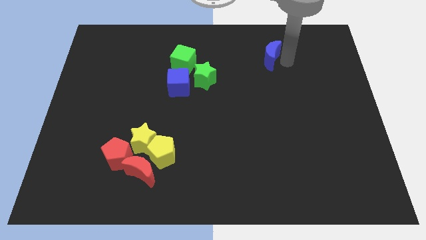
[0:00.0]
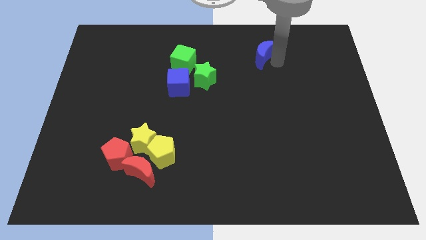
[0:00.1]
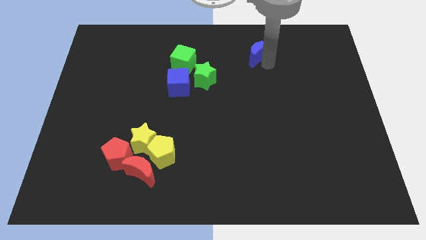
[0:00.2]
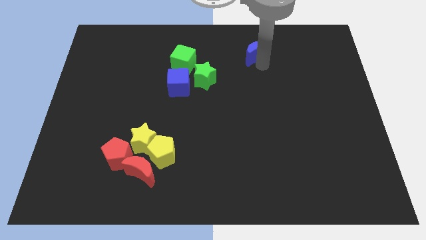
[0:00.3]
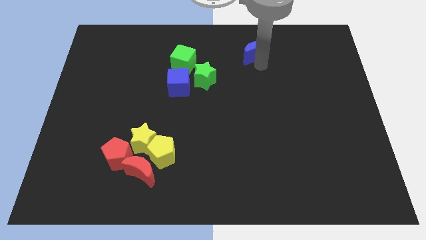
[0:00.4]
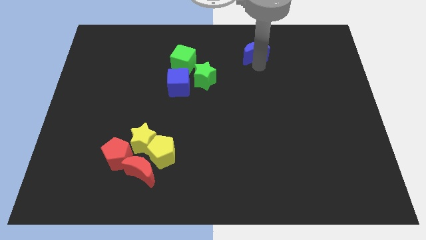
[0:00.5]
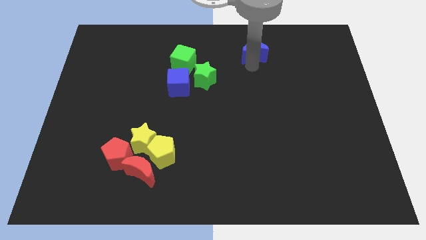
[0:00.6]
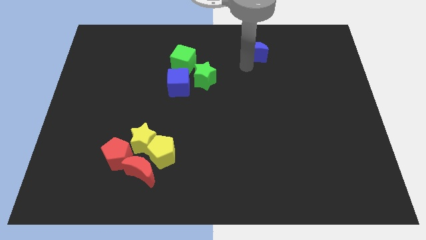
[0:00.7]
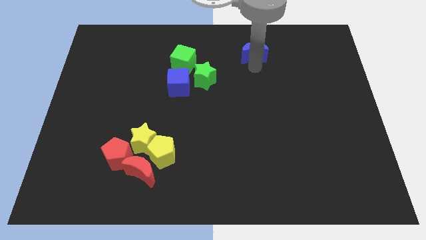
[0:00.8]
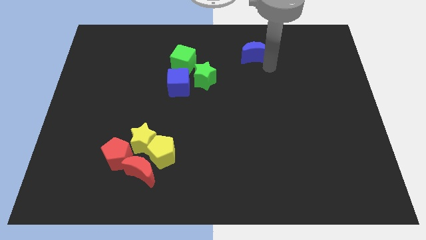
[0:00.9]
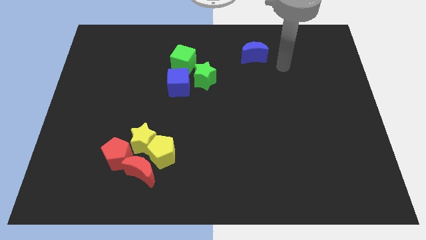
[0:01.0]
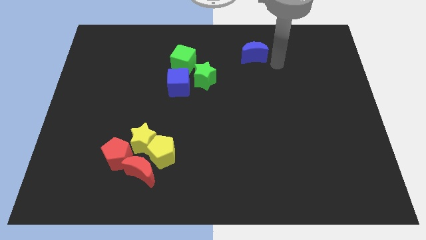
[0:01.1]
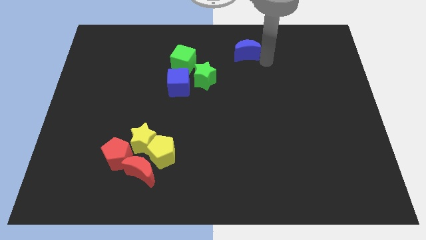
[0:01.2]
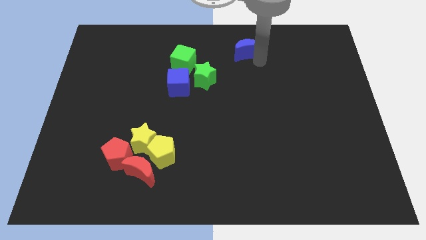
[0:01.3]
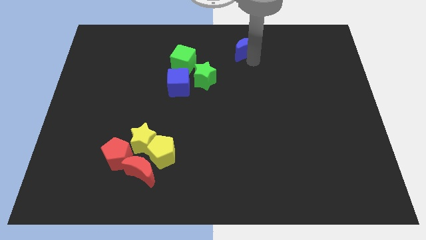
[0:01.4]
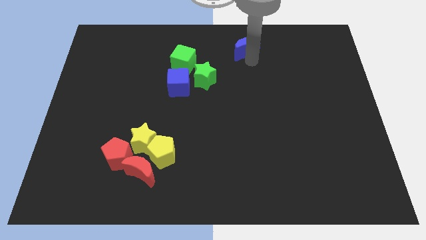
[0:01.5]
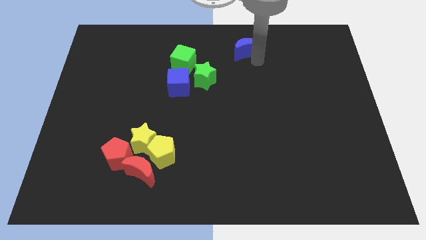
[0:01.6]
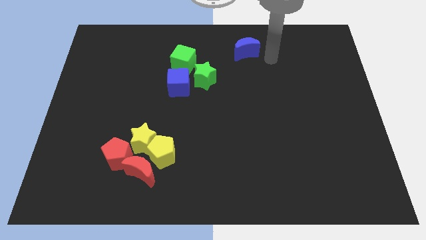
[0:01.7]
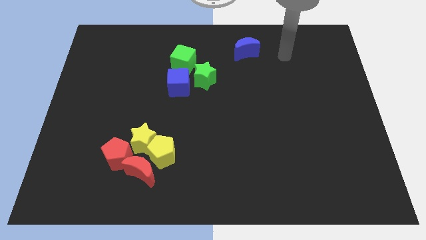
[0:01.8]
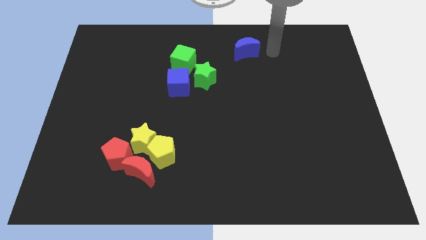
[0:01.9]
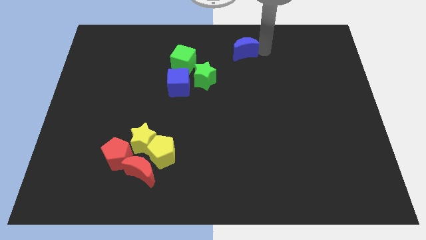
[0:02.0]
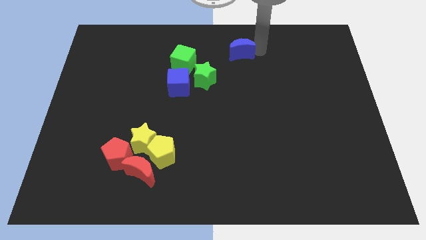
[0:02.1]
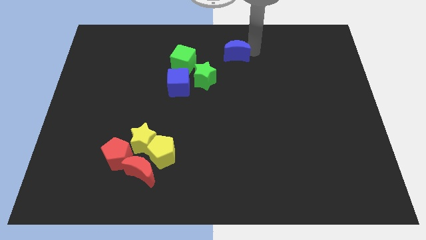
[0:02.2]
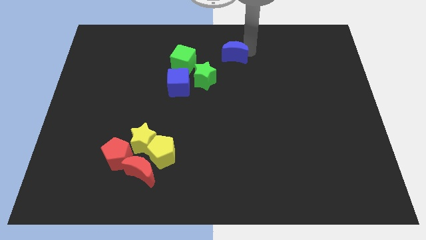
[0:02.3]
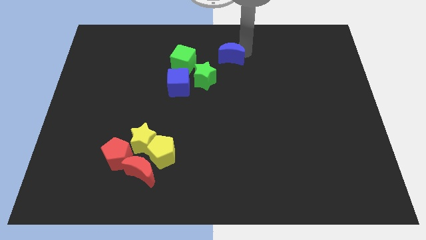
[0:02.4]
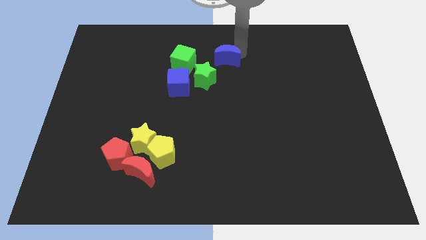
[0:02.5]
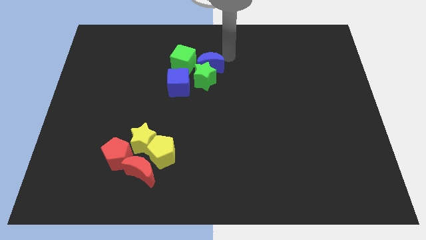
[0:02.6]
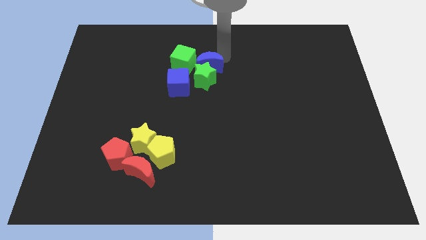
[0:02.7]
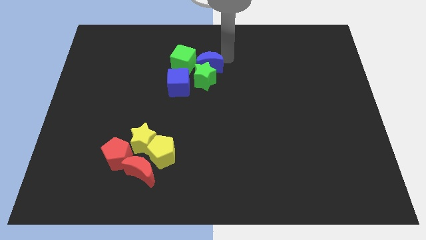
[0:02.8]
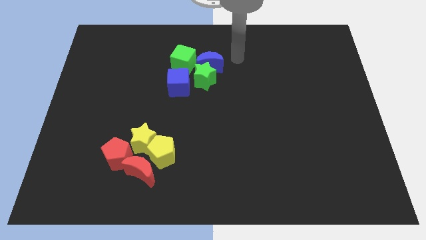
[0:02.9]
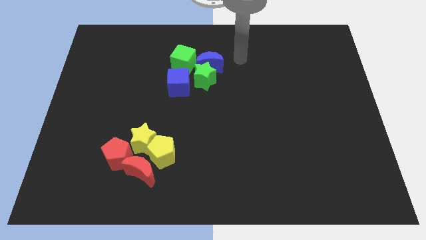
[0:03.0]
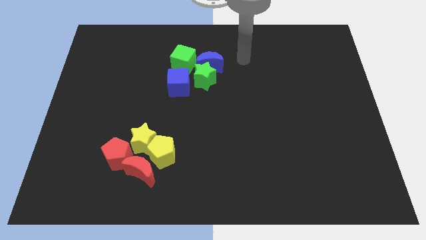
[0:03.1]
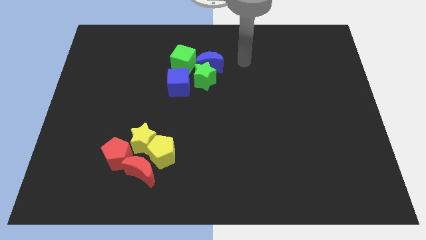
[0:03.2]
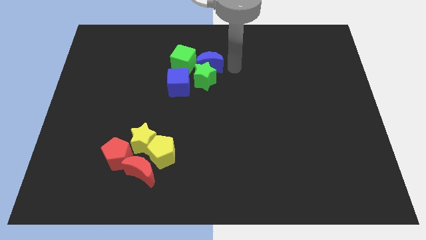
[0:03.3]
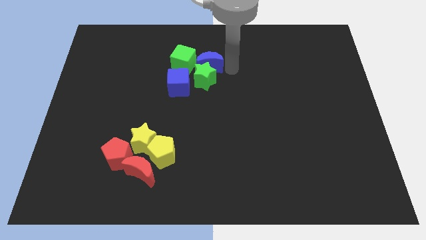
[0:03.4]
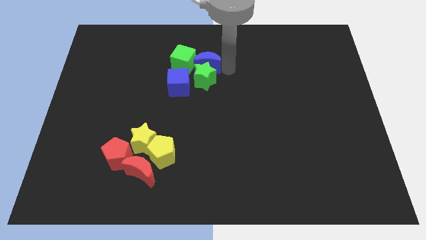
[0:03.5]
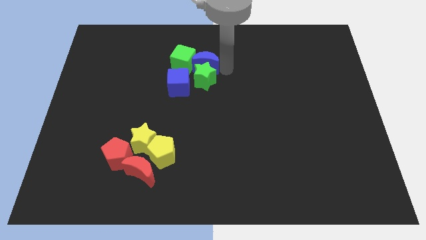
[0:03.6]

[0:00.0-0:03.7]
slide the blue crescent into the group of blocks

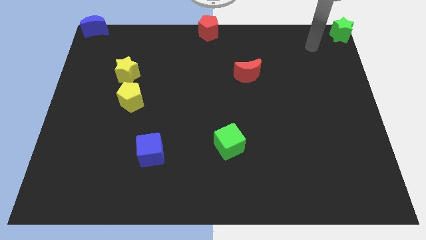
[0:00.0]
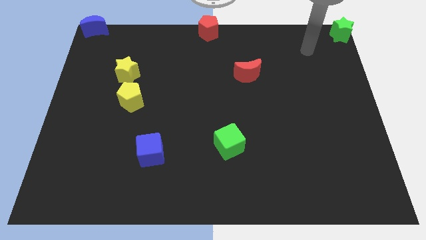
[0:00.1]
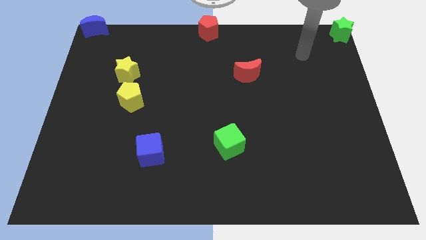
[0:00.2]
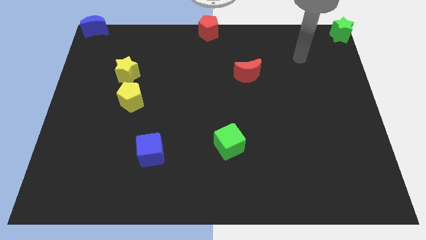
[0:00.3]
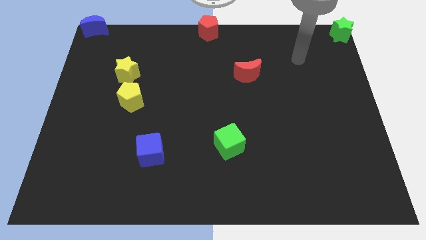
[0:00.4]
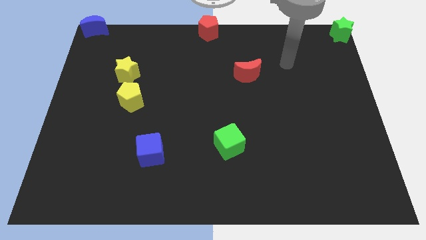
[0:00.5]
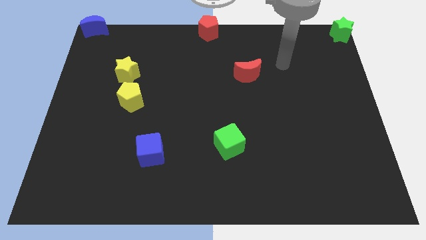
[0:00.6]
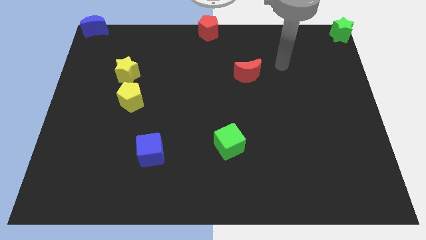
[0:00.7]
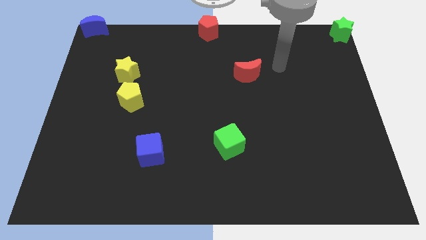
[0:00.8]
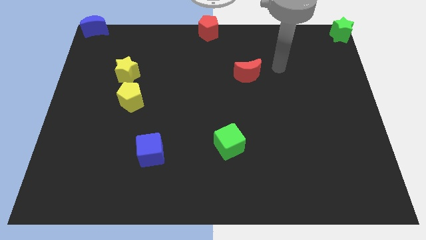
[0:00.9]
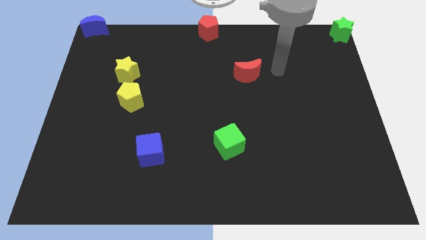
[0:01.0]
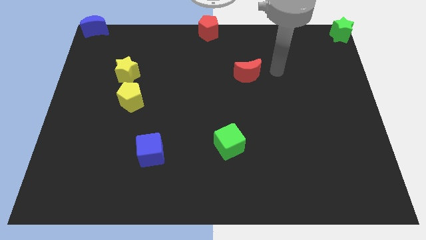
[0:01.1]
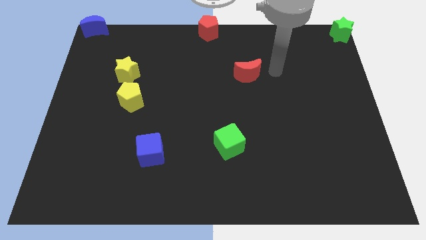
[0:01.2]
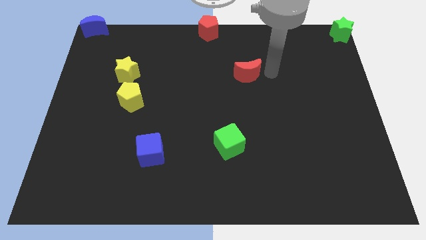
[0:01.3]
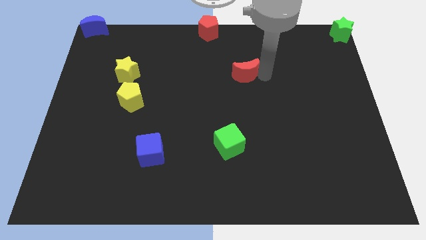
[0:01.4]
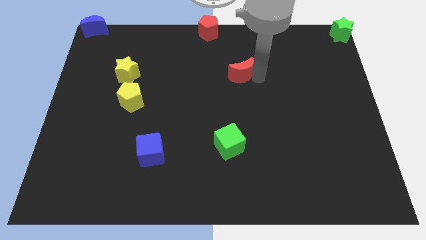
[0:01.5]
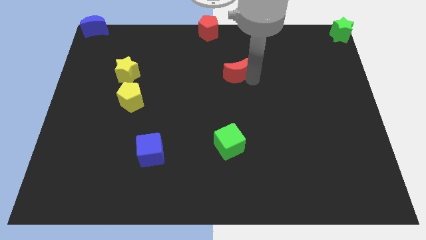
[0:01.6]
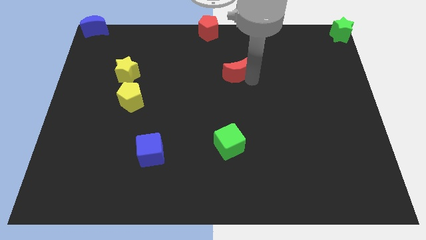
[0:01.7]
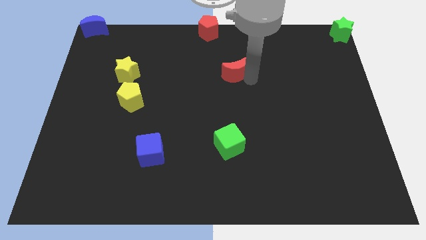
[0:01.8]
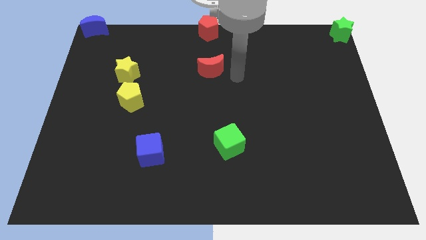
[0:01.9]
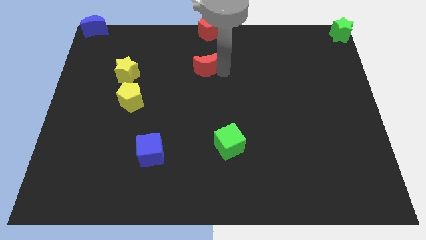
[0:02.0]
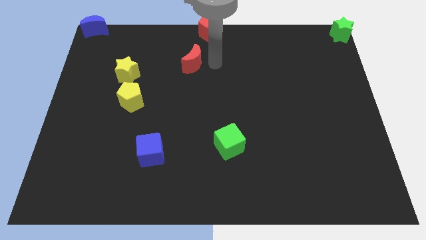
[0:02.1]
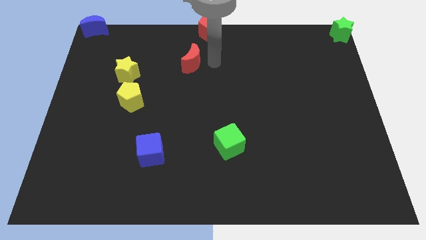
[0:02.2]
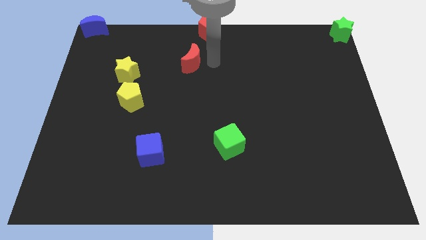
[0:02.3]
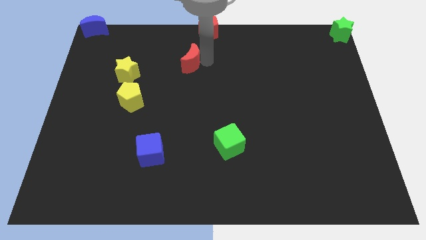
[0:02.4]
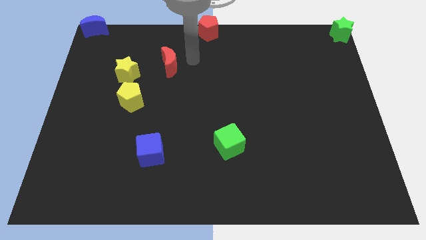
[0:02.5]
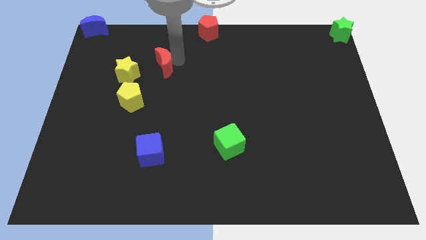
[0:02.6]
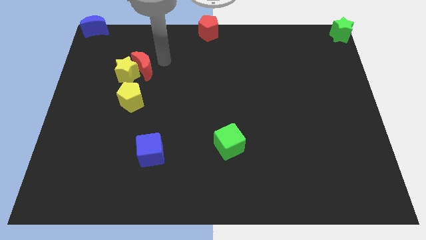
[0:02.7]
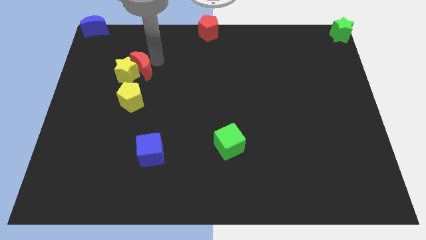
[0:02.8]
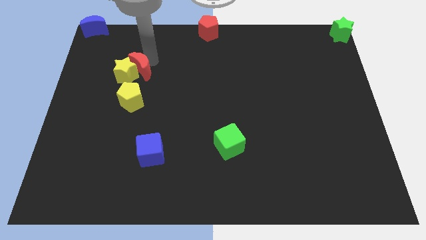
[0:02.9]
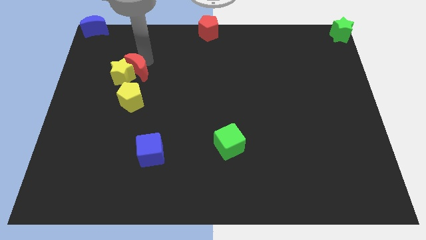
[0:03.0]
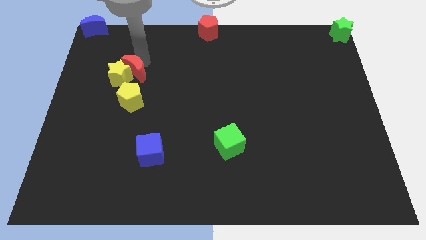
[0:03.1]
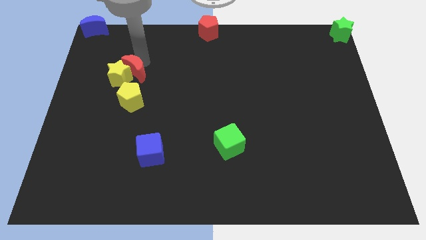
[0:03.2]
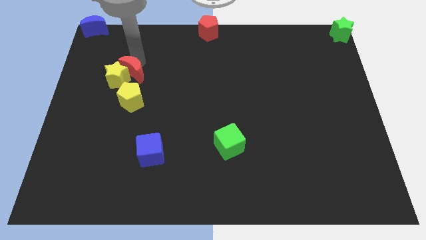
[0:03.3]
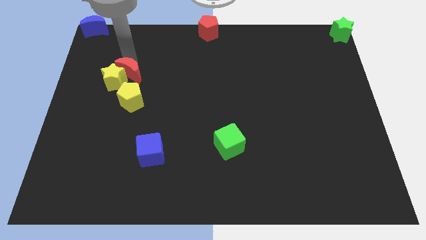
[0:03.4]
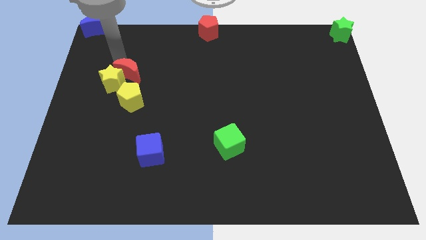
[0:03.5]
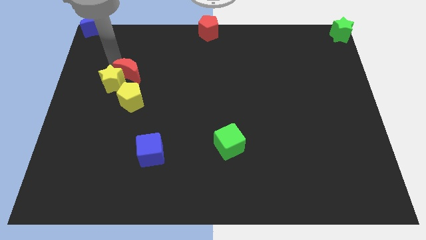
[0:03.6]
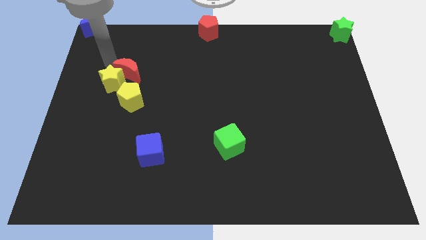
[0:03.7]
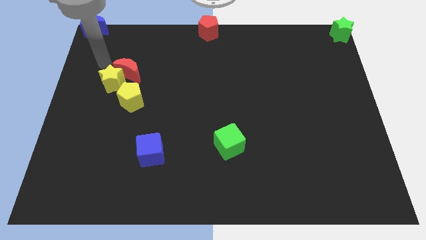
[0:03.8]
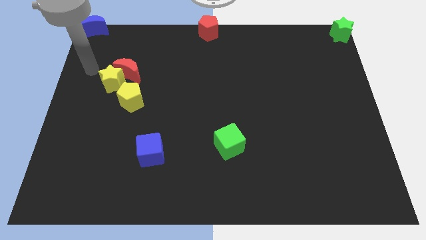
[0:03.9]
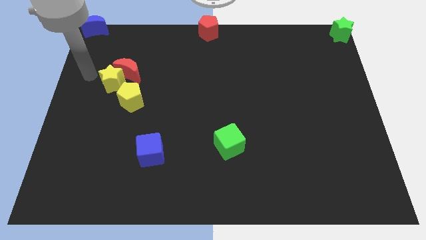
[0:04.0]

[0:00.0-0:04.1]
push the red moon into the yellow star

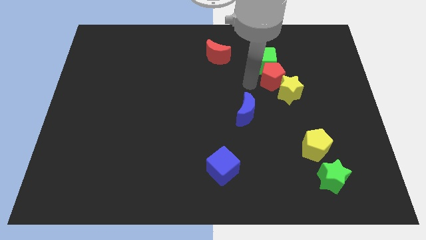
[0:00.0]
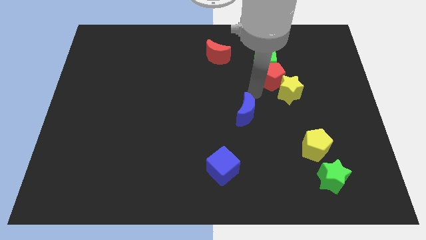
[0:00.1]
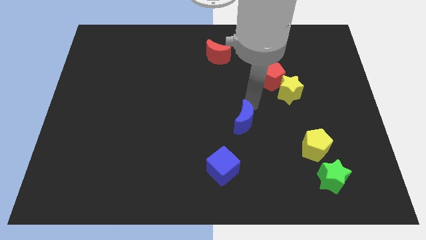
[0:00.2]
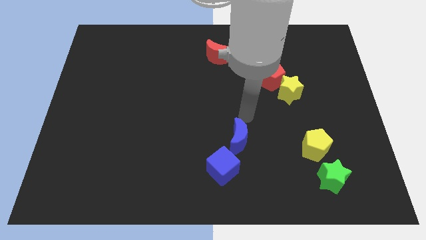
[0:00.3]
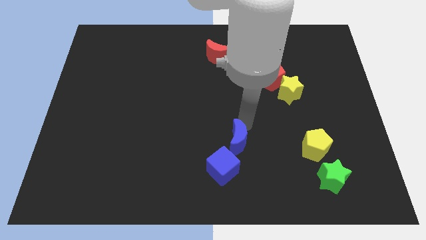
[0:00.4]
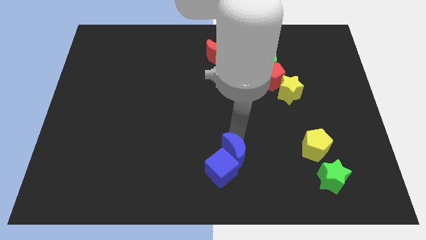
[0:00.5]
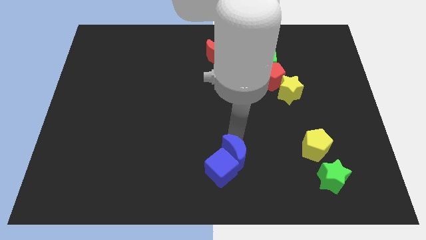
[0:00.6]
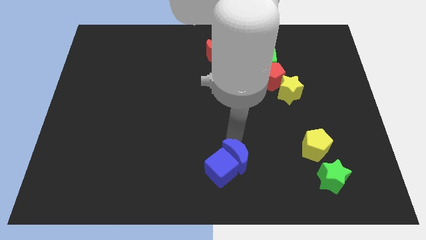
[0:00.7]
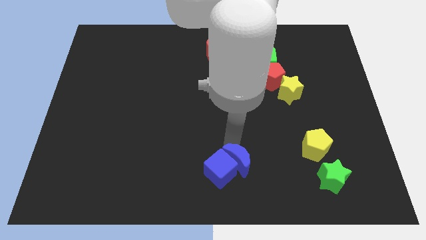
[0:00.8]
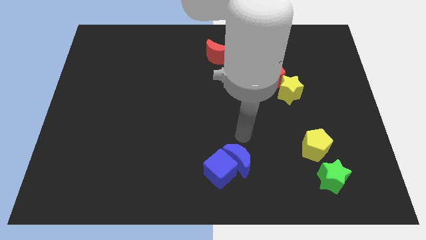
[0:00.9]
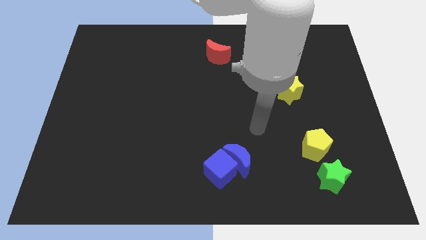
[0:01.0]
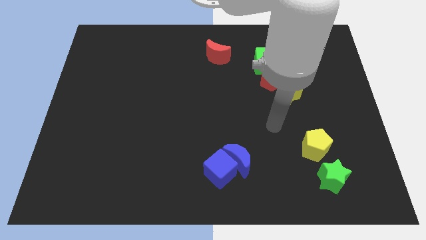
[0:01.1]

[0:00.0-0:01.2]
push the blue moon into blue cube

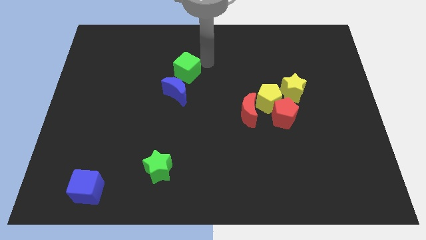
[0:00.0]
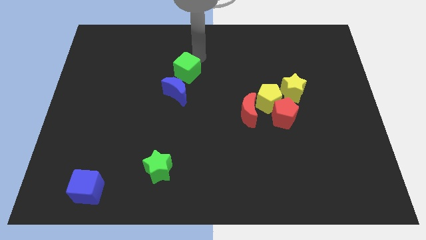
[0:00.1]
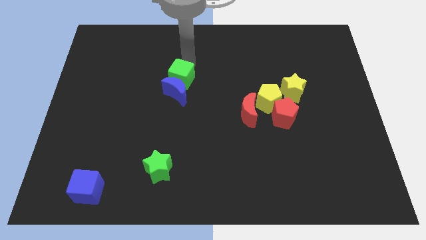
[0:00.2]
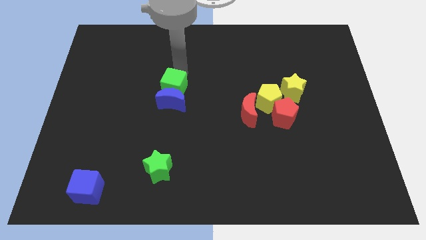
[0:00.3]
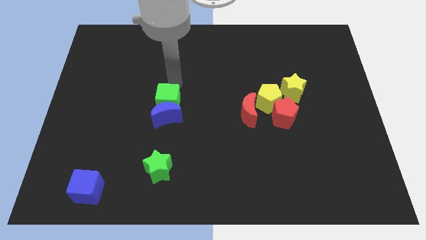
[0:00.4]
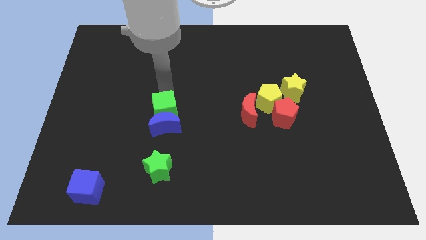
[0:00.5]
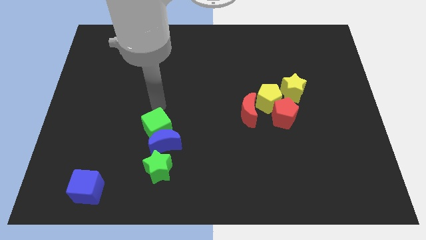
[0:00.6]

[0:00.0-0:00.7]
push the green cube to the top of the green star along with the blue crescent
